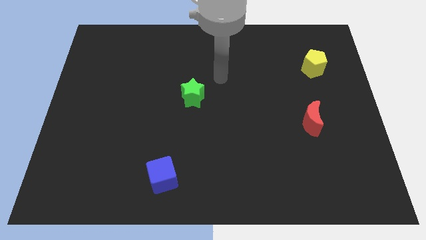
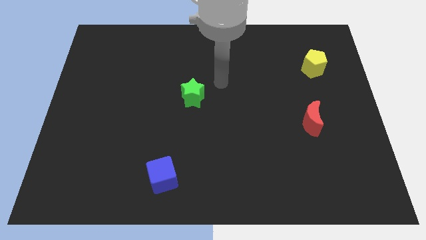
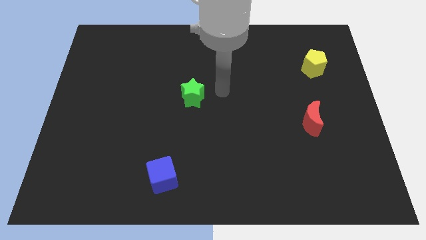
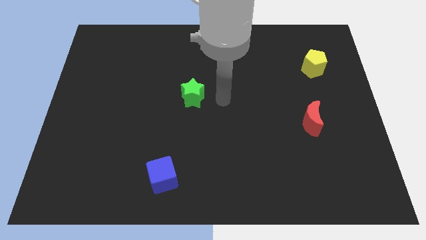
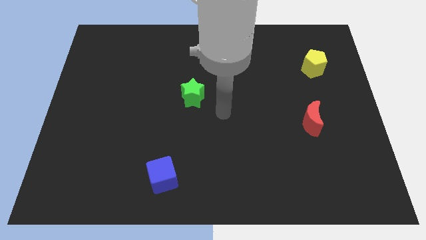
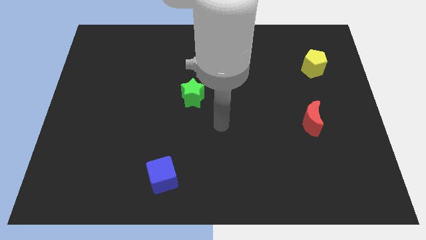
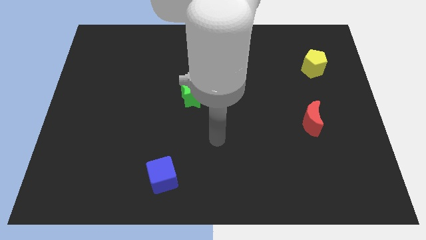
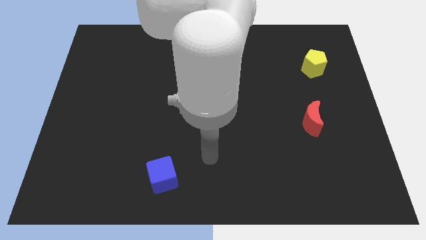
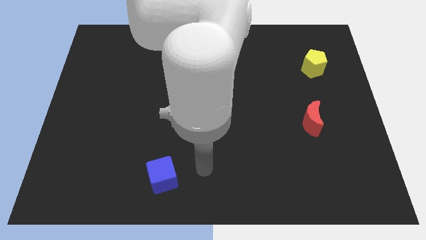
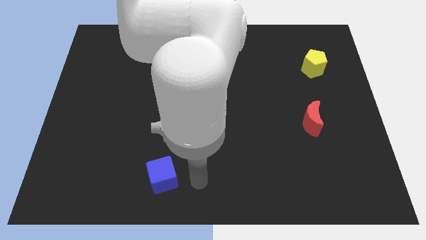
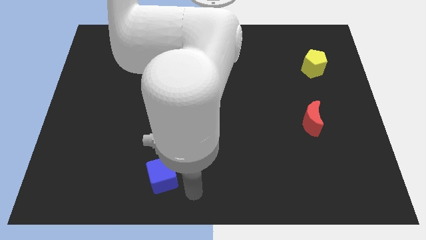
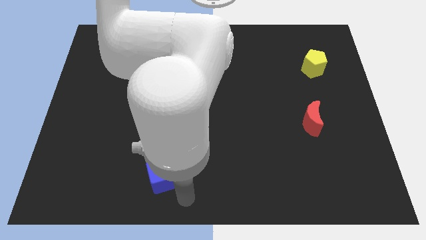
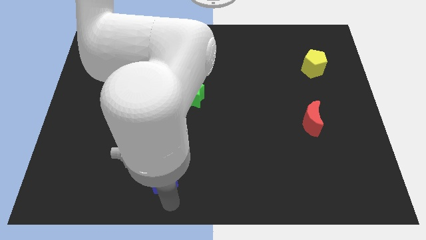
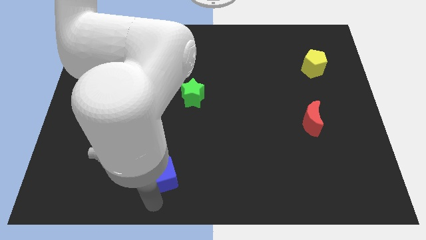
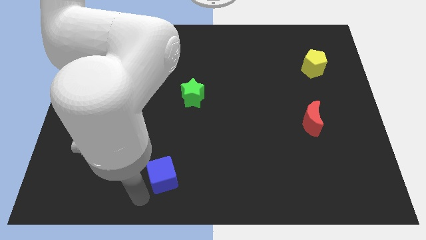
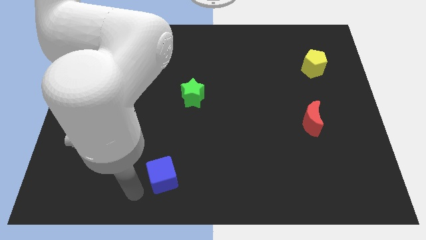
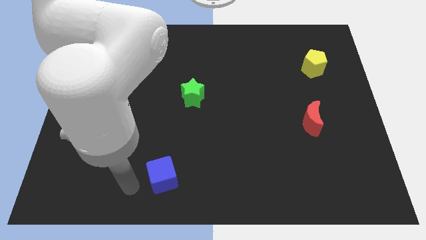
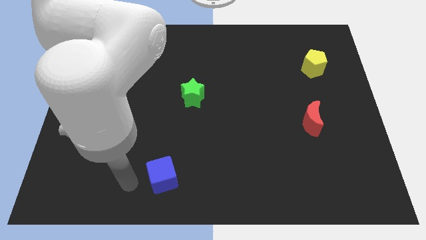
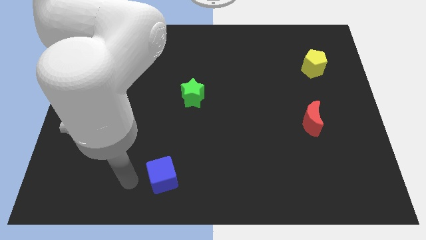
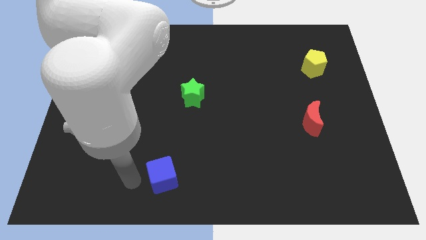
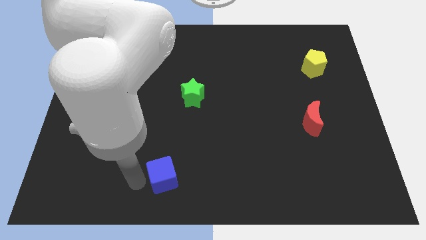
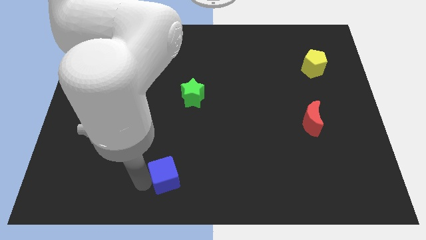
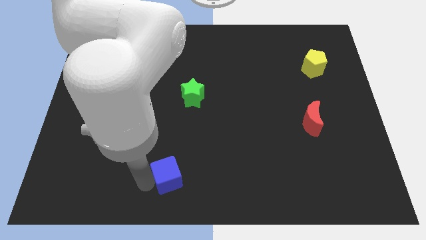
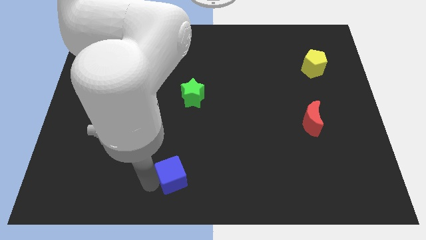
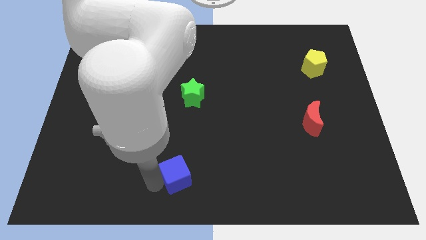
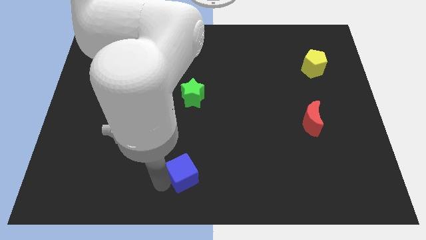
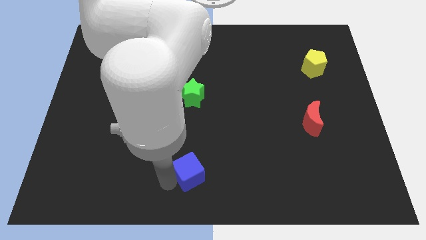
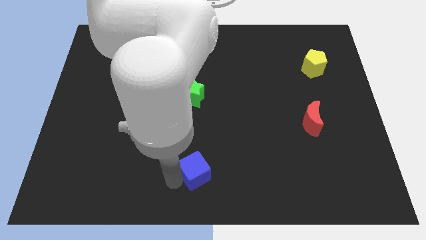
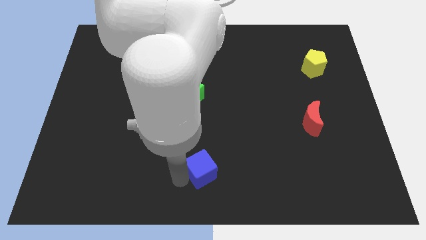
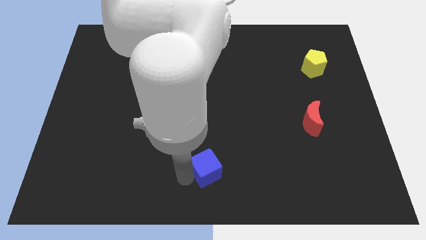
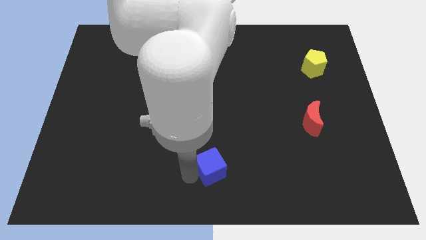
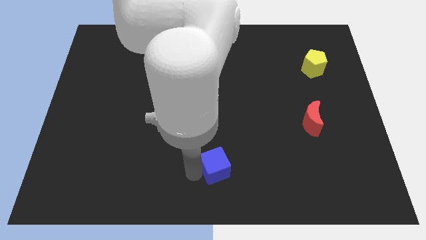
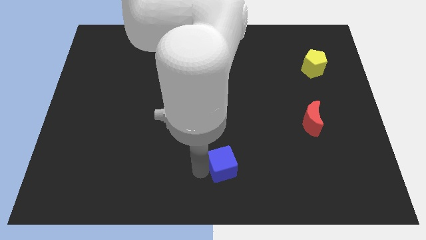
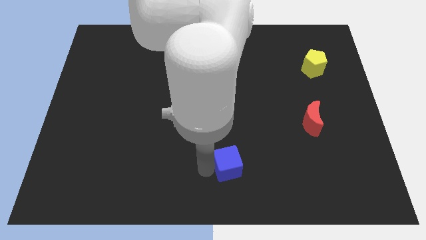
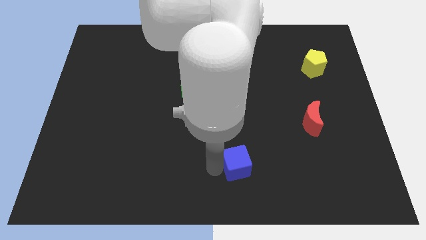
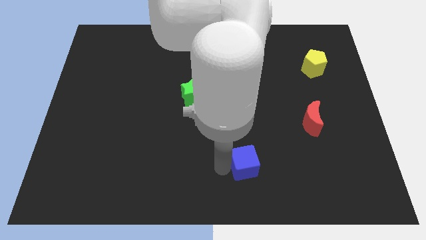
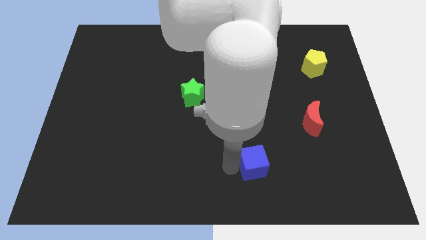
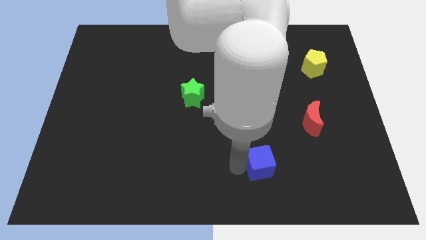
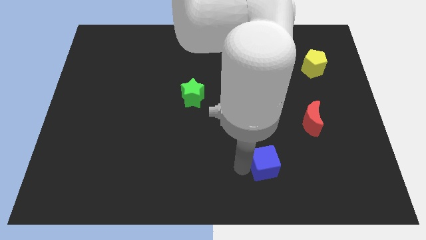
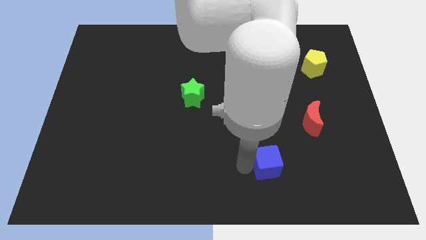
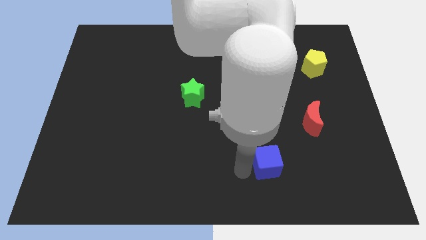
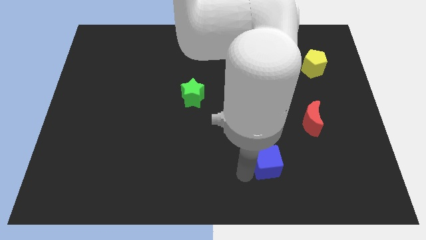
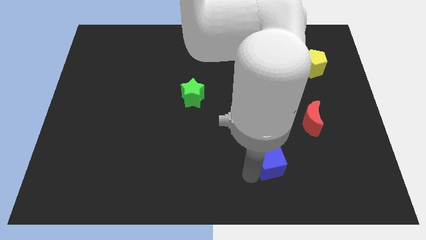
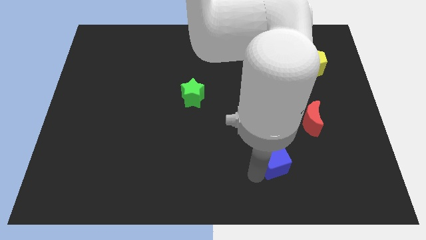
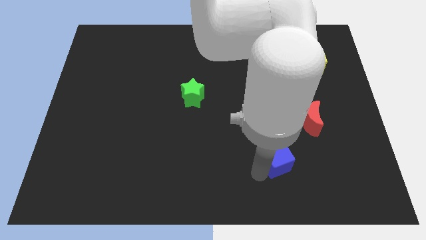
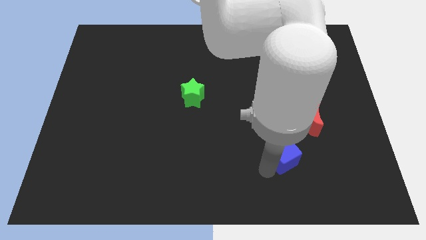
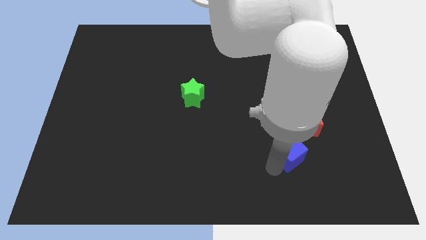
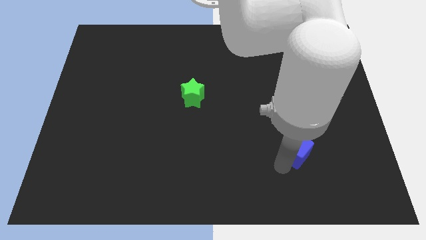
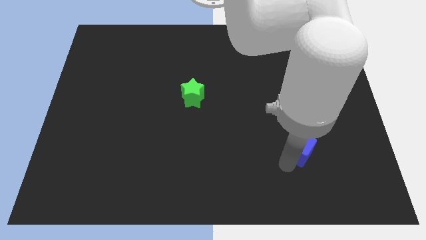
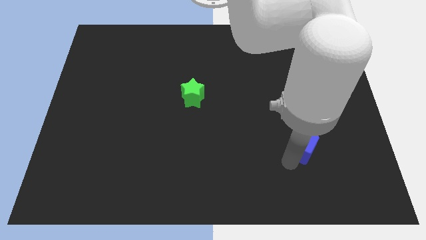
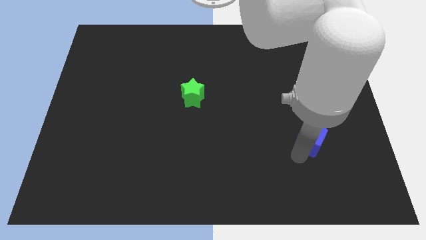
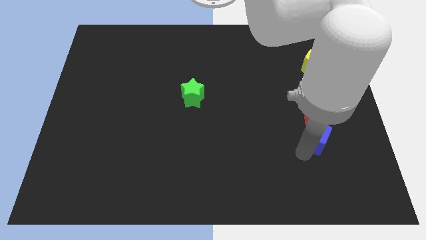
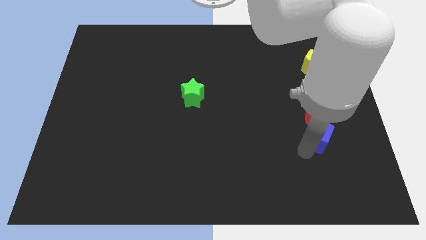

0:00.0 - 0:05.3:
put the blue block next to the red block

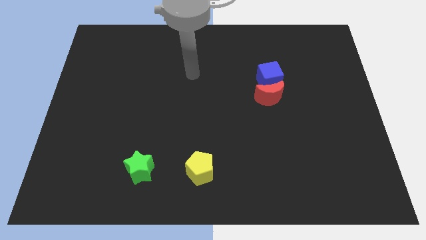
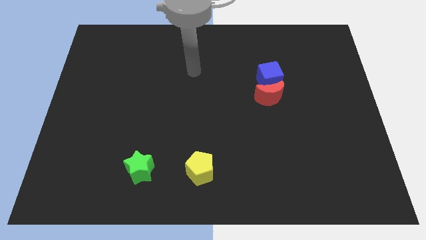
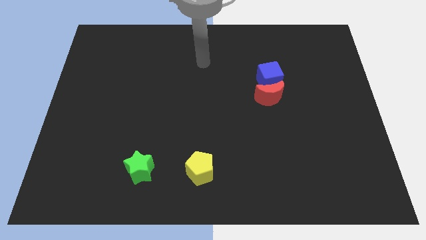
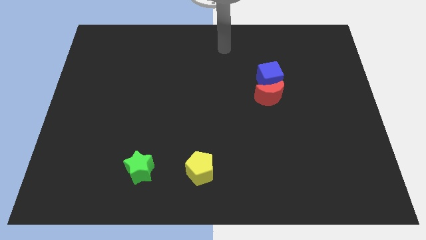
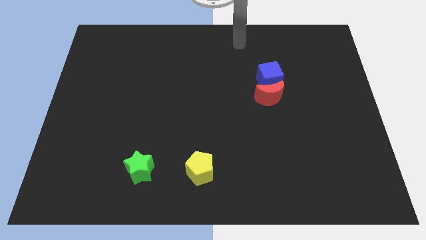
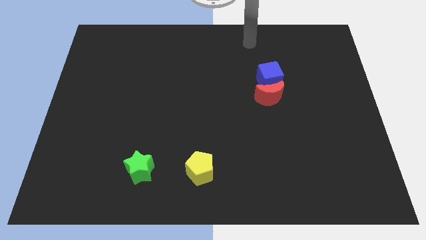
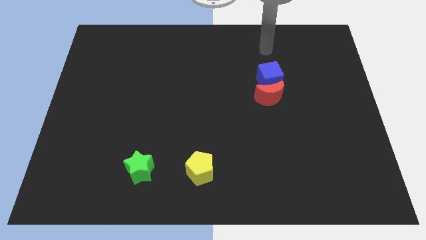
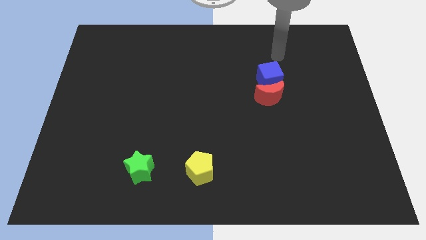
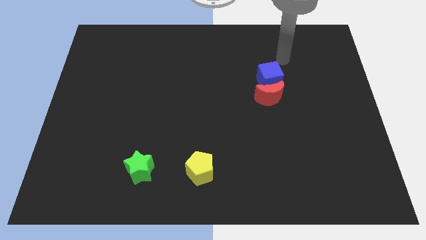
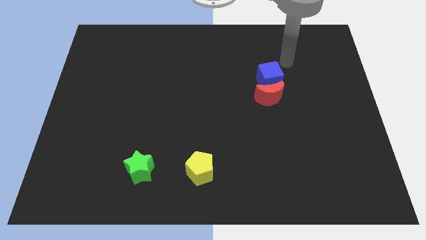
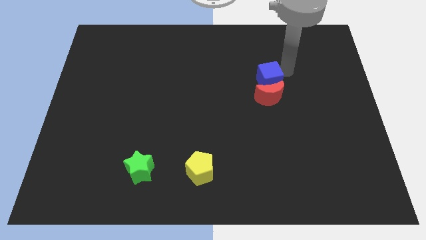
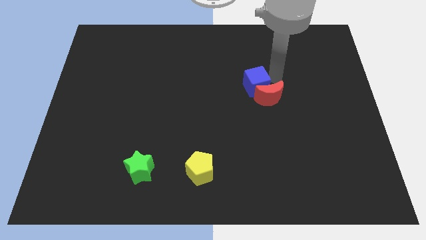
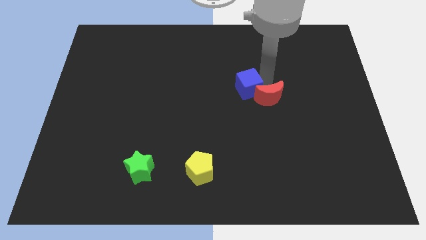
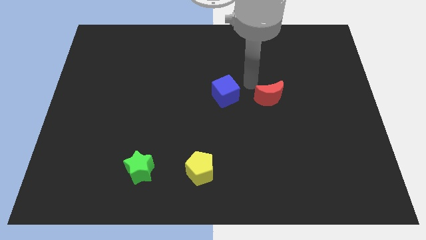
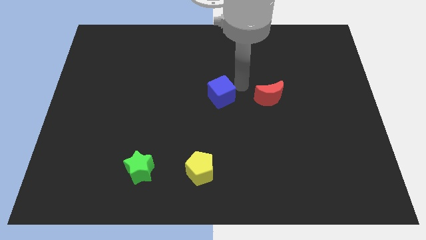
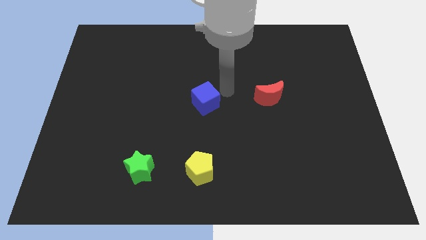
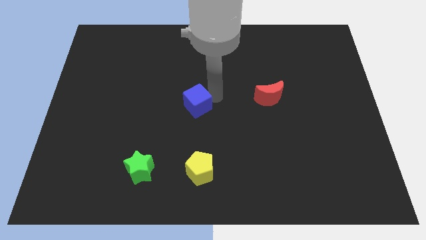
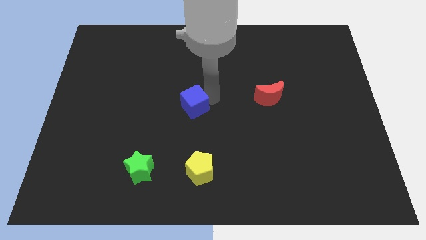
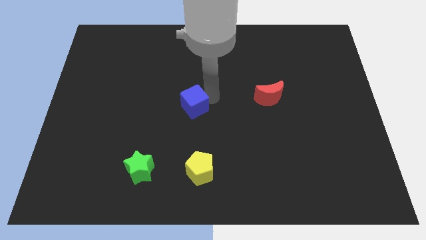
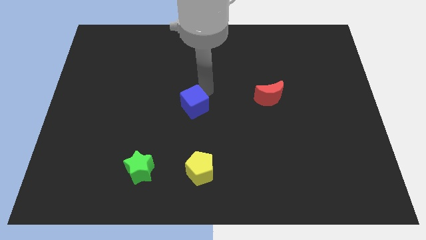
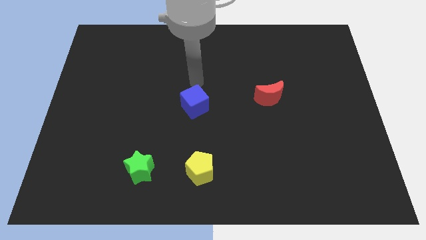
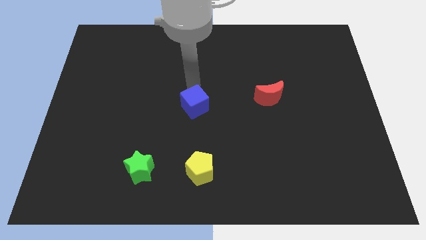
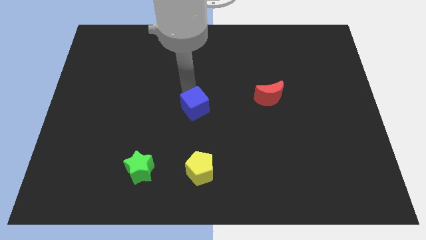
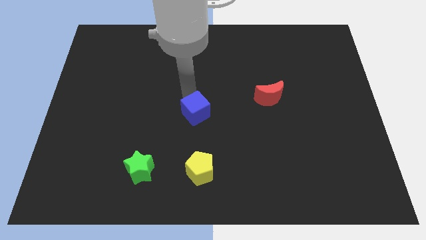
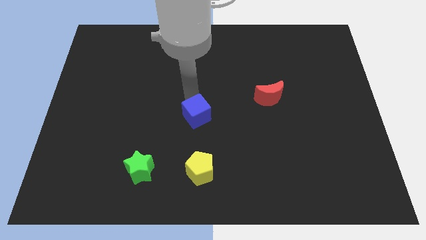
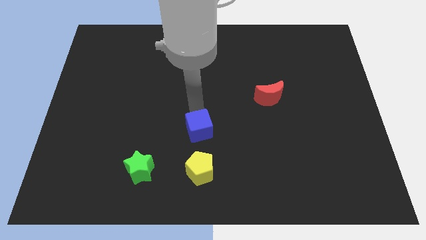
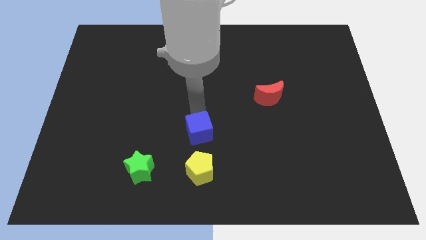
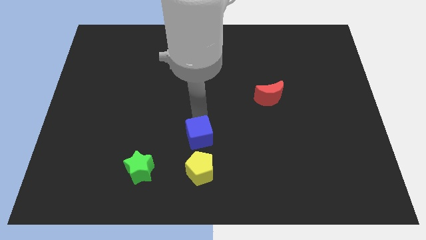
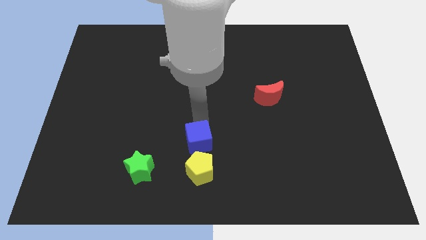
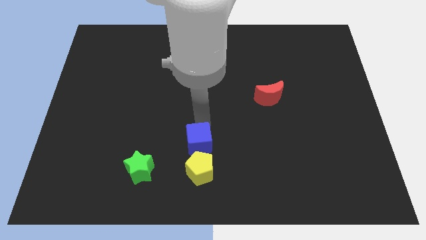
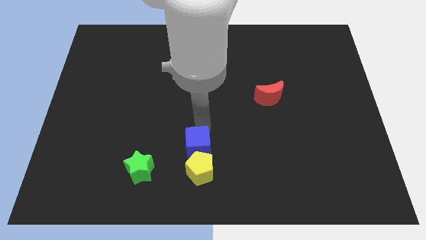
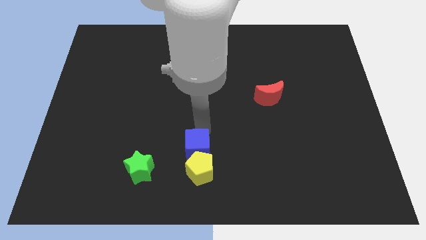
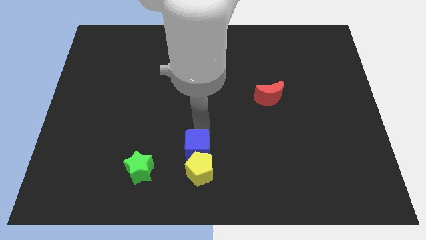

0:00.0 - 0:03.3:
push the cube next to the pentagon
